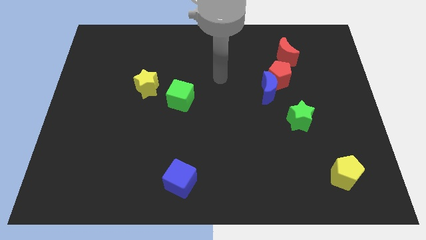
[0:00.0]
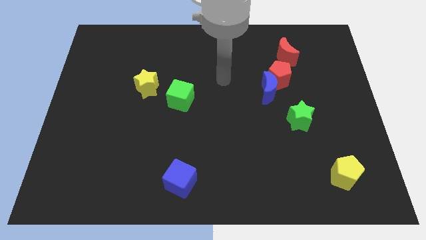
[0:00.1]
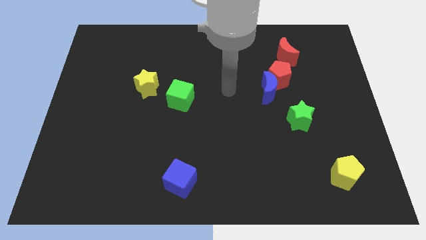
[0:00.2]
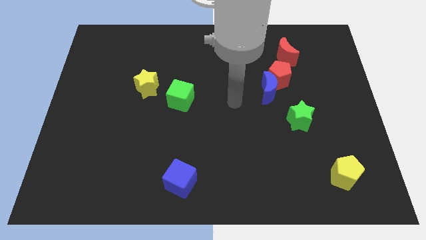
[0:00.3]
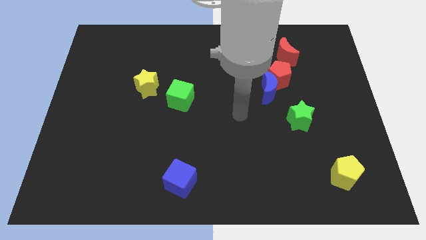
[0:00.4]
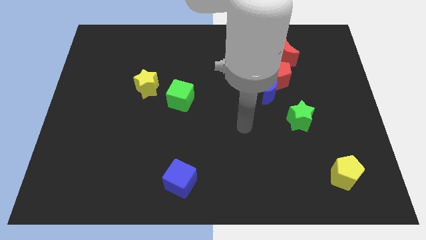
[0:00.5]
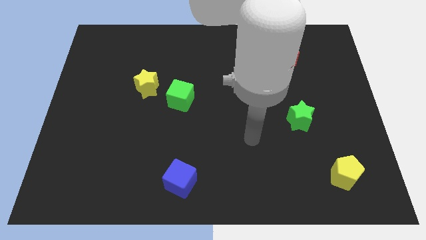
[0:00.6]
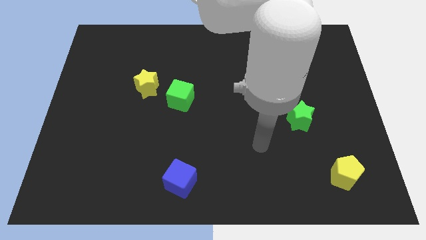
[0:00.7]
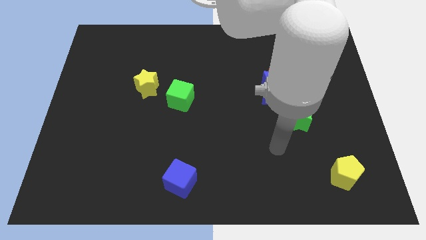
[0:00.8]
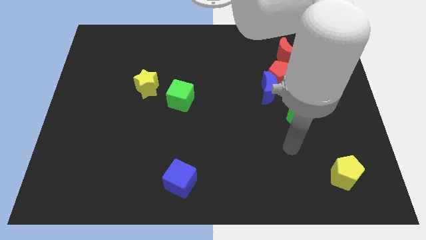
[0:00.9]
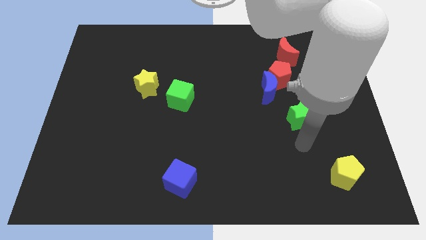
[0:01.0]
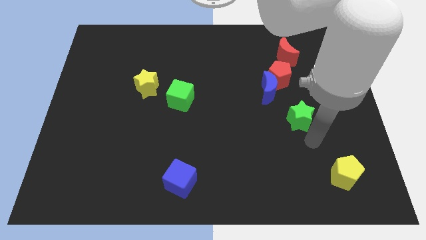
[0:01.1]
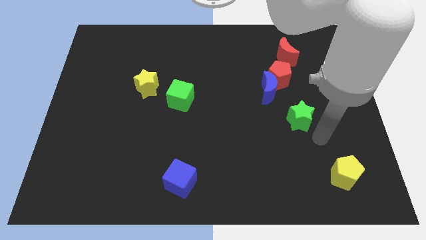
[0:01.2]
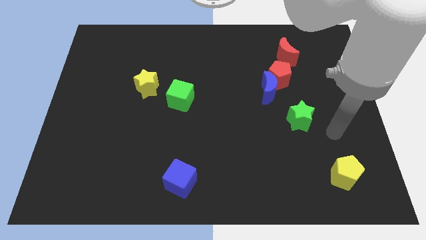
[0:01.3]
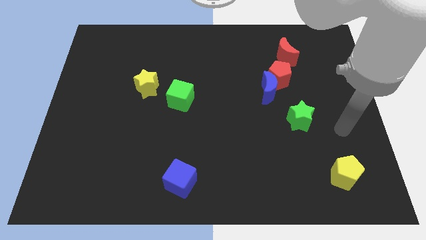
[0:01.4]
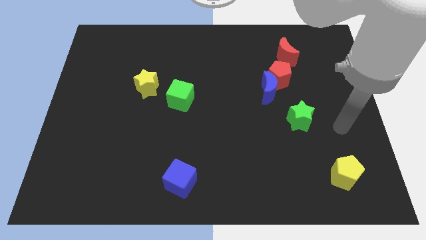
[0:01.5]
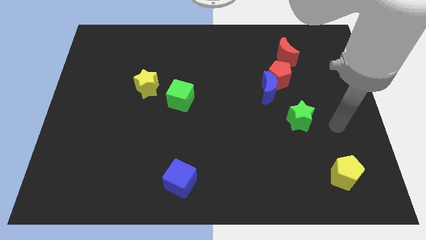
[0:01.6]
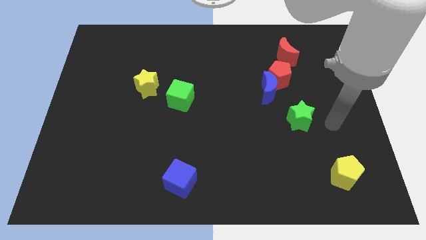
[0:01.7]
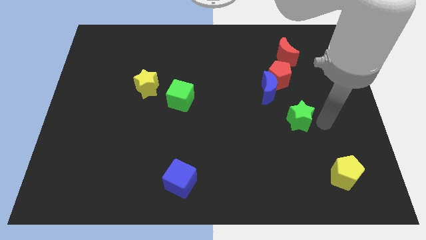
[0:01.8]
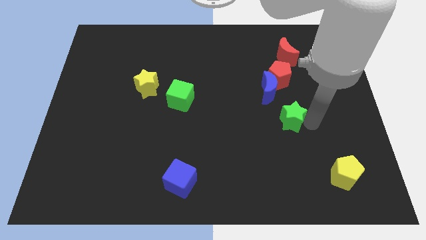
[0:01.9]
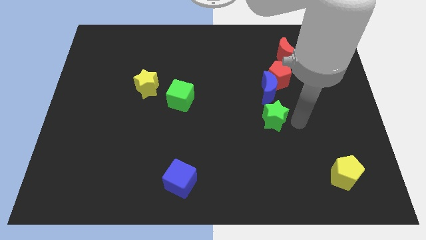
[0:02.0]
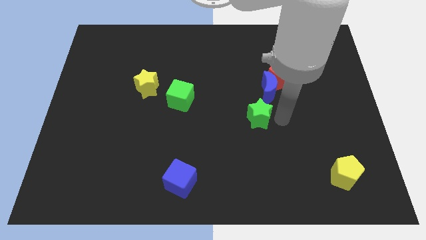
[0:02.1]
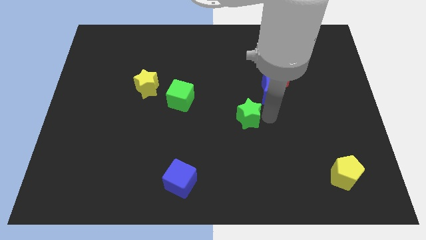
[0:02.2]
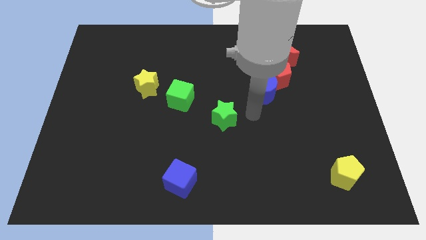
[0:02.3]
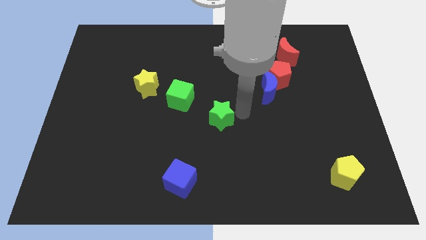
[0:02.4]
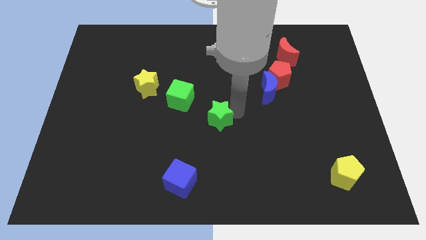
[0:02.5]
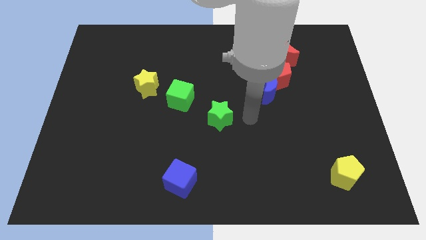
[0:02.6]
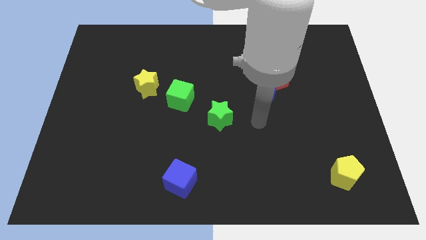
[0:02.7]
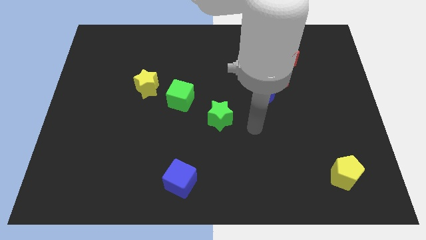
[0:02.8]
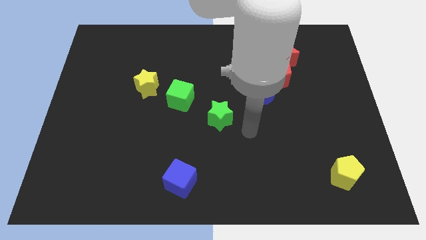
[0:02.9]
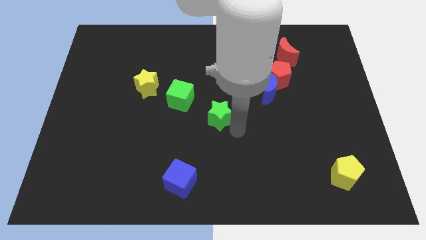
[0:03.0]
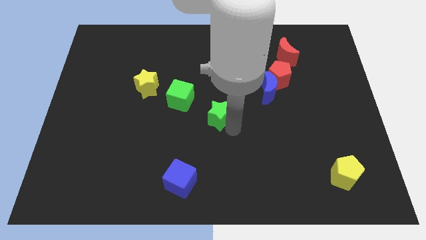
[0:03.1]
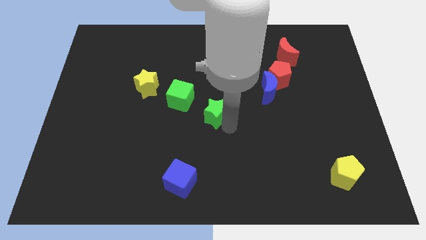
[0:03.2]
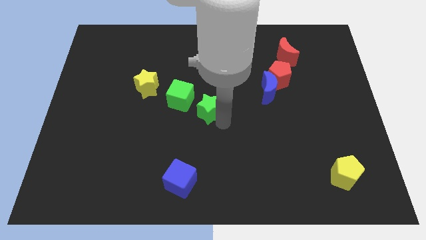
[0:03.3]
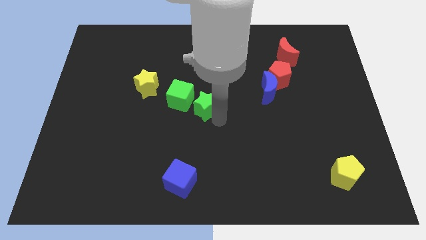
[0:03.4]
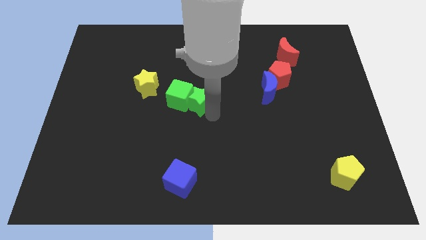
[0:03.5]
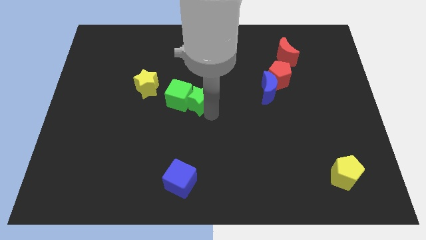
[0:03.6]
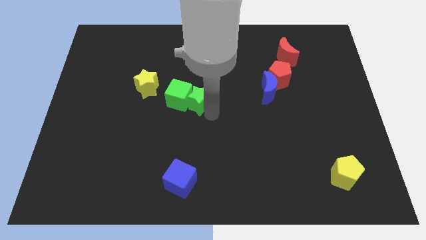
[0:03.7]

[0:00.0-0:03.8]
push the green star to the right of the green cube

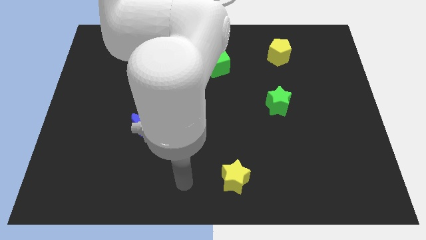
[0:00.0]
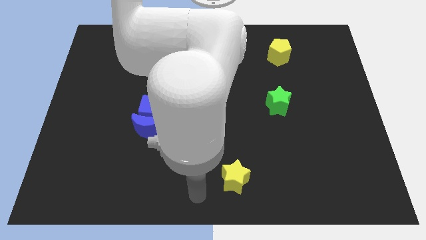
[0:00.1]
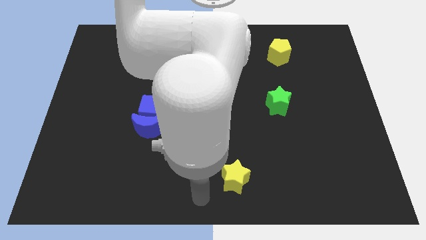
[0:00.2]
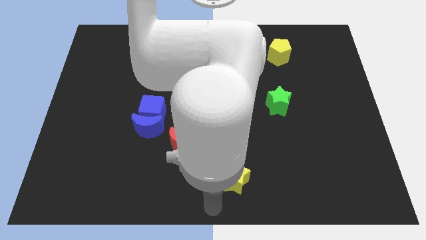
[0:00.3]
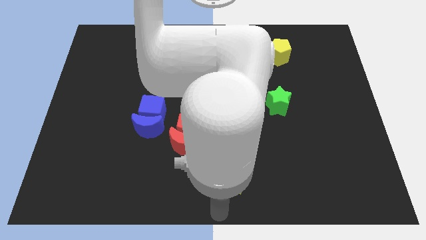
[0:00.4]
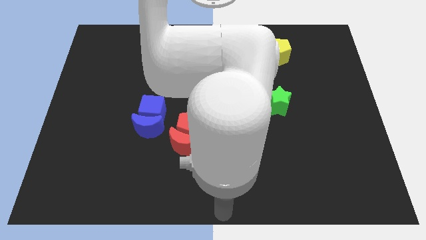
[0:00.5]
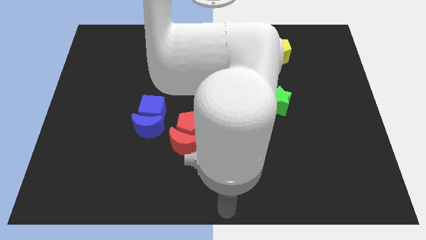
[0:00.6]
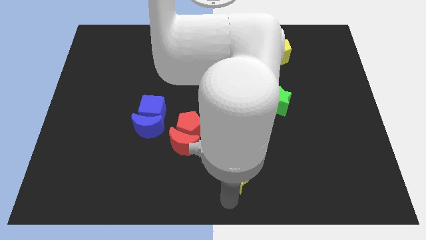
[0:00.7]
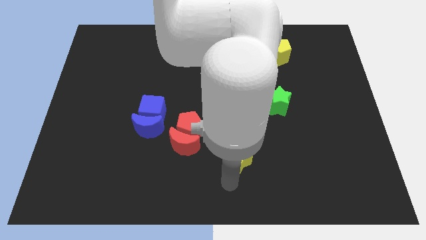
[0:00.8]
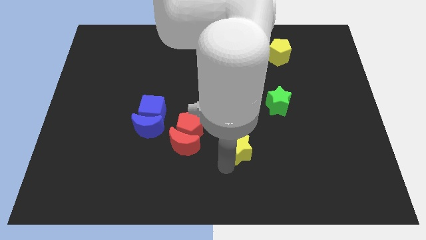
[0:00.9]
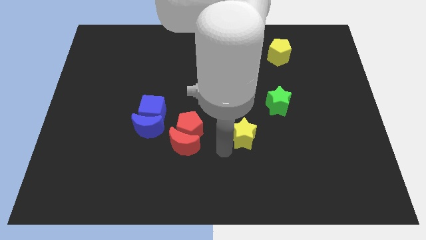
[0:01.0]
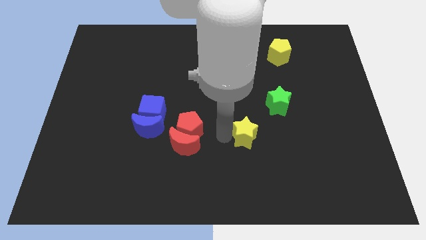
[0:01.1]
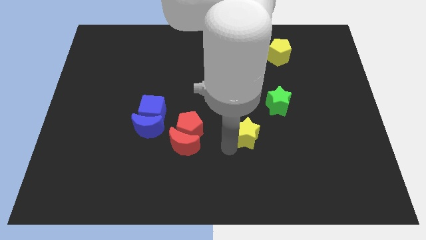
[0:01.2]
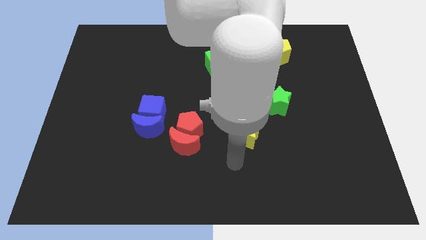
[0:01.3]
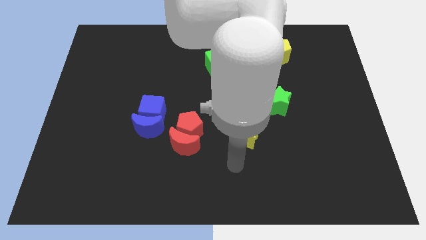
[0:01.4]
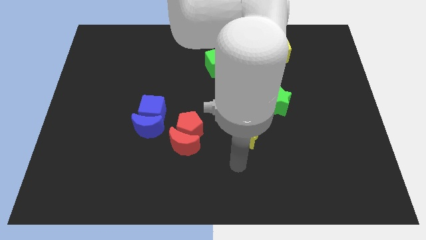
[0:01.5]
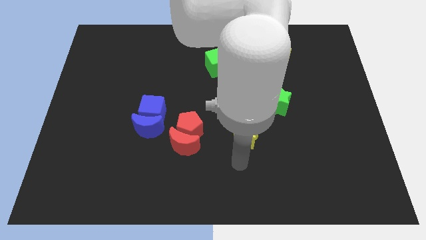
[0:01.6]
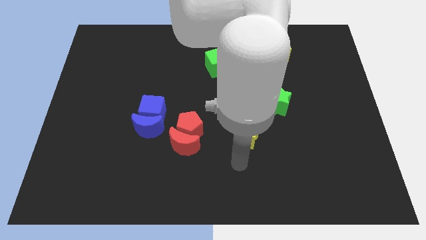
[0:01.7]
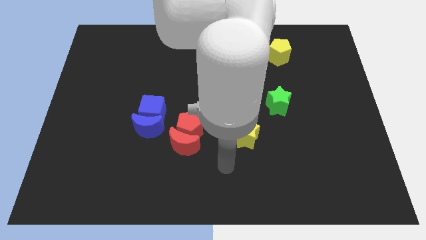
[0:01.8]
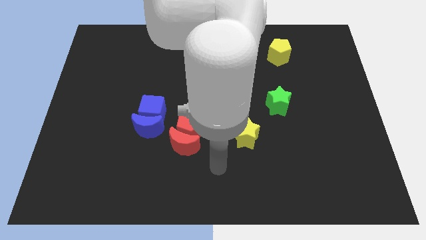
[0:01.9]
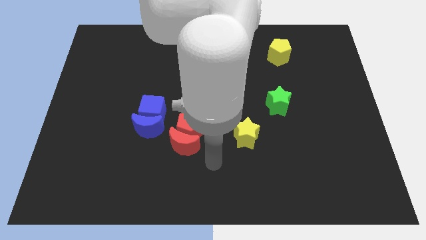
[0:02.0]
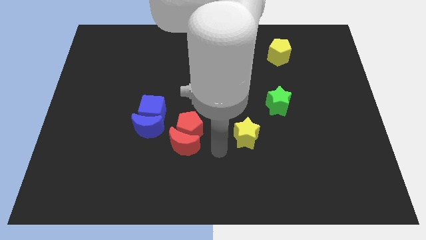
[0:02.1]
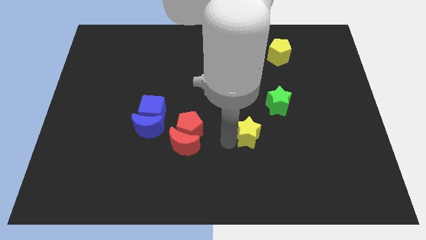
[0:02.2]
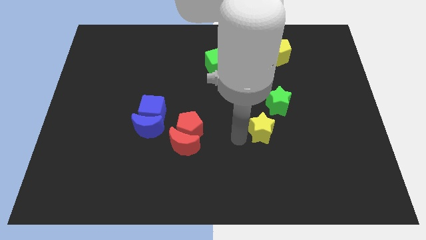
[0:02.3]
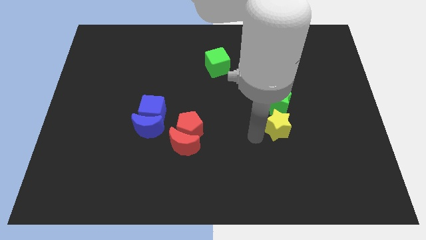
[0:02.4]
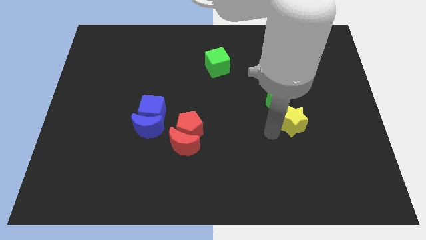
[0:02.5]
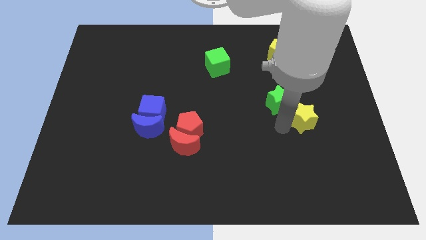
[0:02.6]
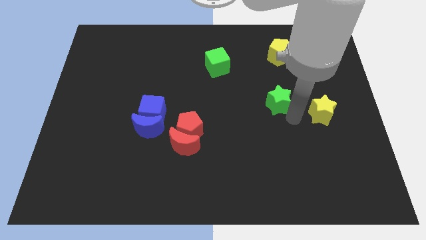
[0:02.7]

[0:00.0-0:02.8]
push the yellow star towards the center right of the board

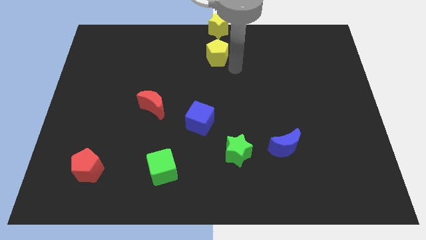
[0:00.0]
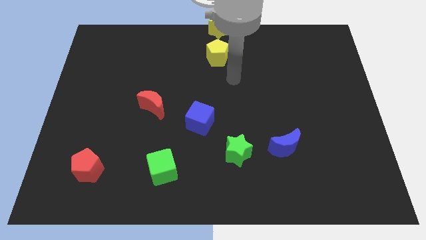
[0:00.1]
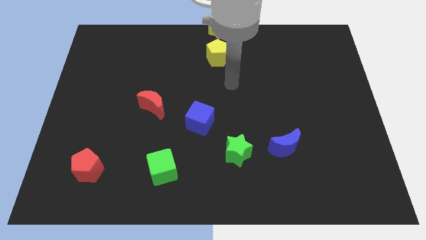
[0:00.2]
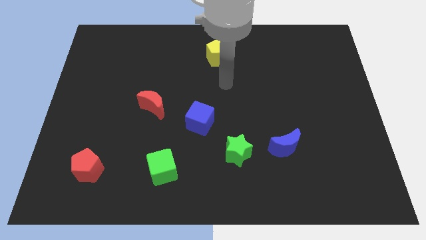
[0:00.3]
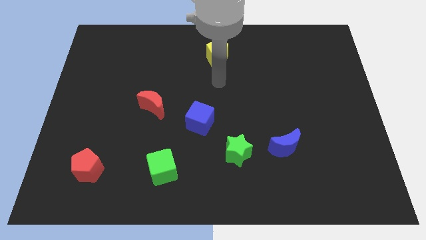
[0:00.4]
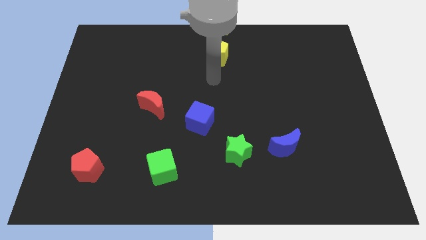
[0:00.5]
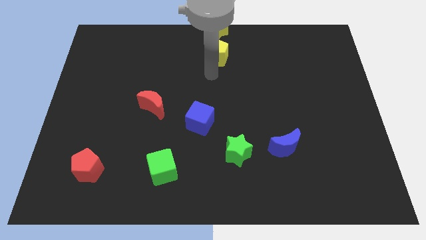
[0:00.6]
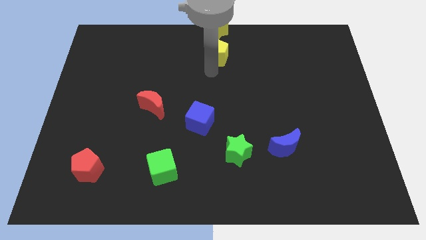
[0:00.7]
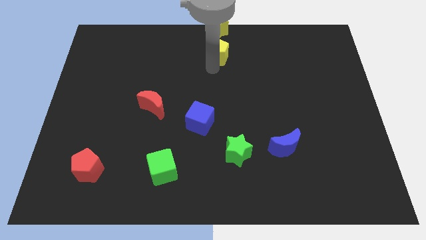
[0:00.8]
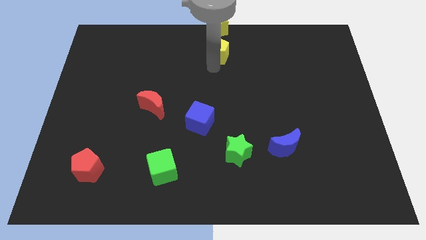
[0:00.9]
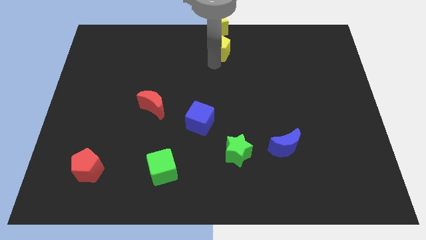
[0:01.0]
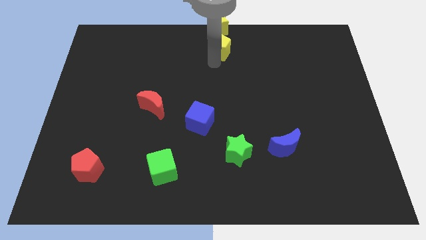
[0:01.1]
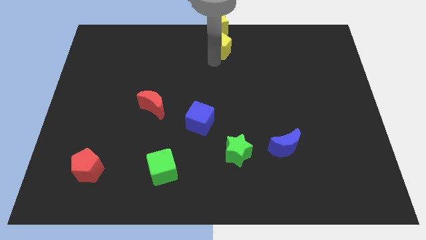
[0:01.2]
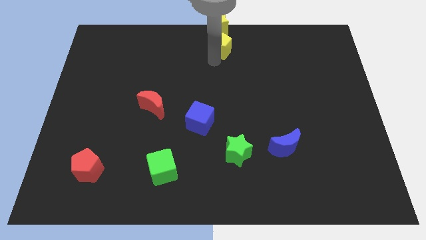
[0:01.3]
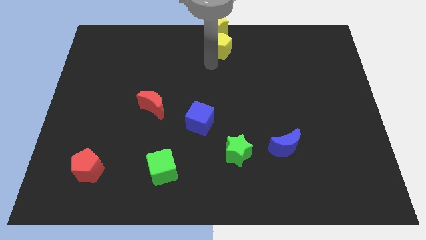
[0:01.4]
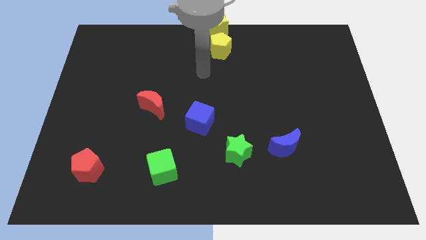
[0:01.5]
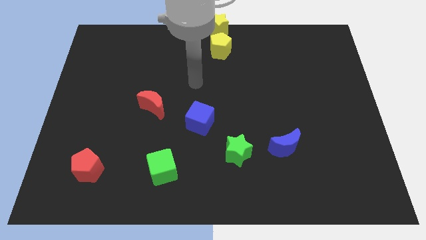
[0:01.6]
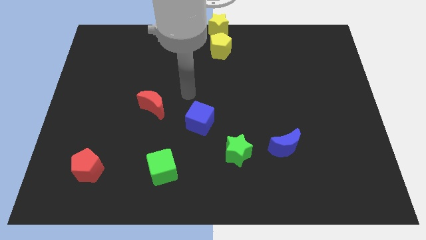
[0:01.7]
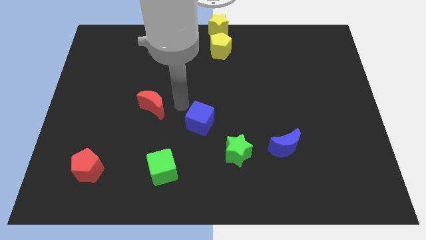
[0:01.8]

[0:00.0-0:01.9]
push the yellow pentagon into the yellow star

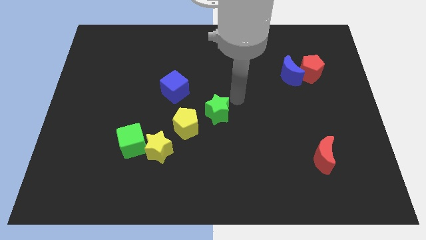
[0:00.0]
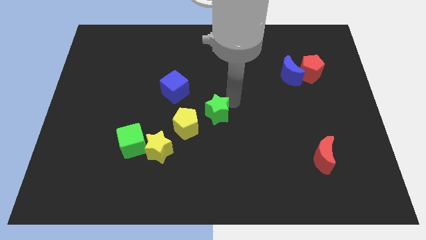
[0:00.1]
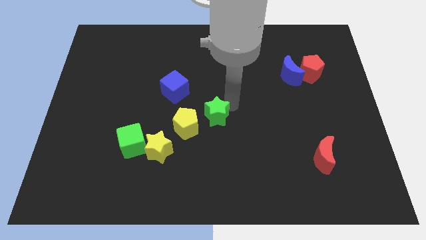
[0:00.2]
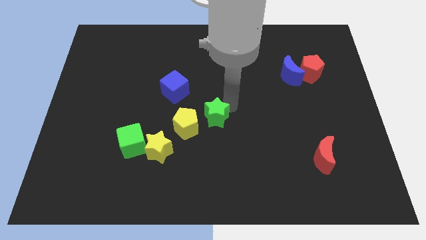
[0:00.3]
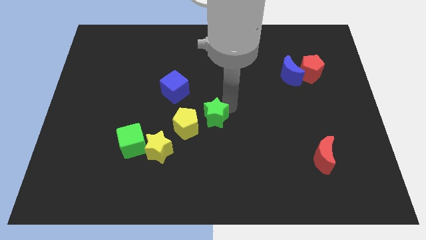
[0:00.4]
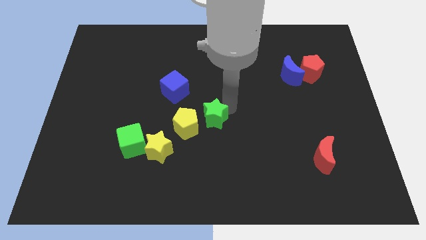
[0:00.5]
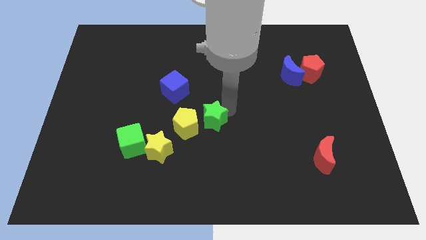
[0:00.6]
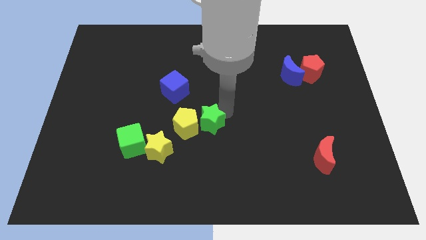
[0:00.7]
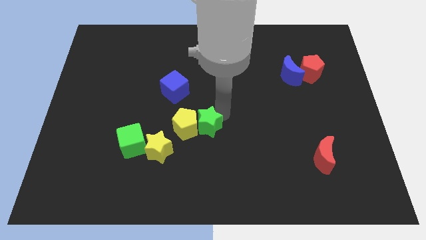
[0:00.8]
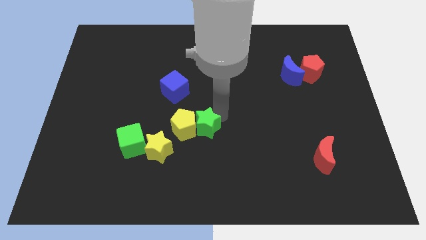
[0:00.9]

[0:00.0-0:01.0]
push the green star close to the yellow pentagon
